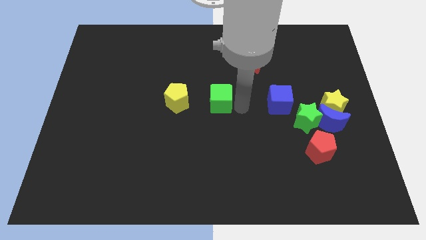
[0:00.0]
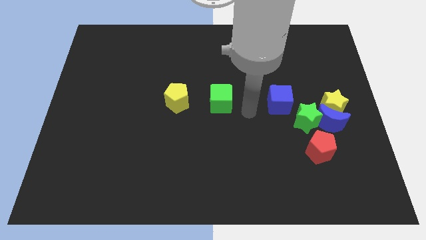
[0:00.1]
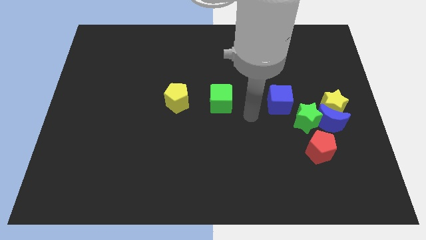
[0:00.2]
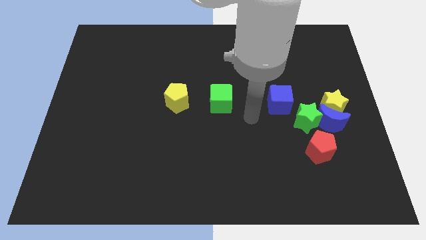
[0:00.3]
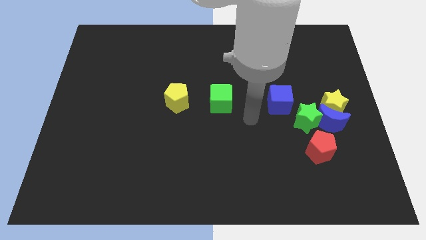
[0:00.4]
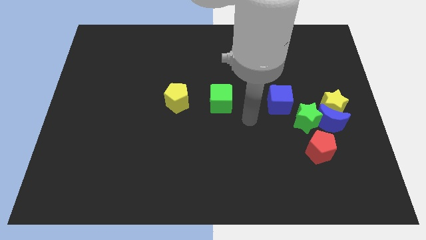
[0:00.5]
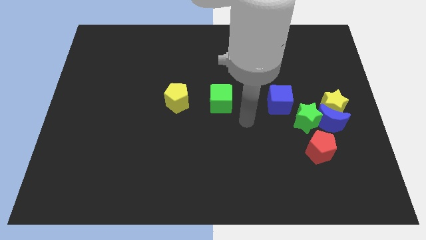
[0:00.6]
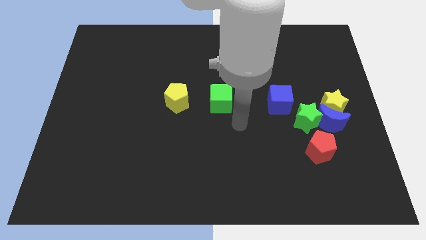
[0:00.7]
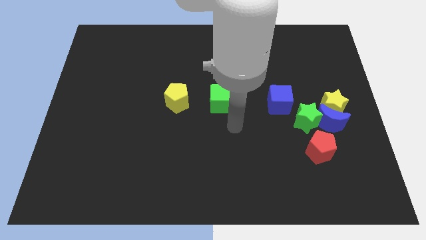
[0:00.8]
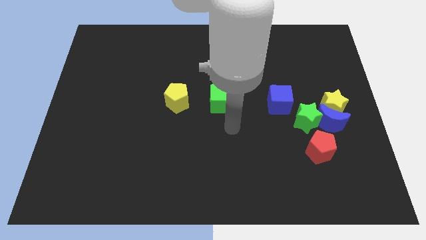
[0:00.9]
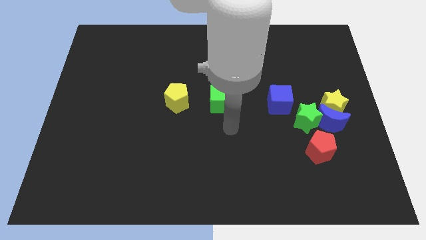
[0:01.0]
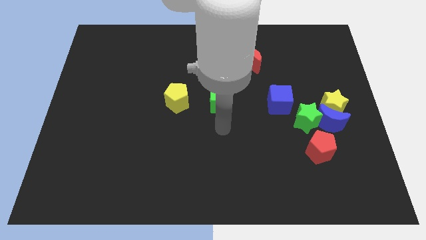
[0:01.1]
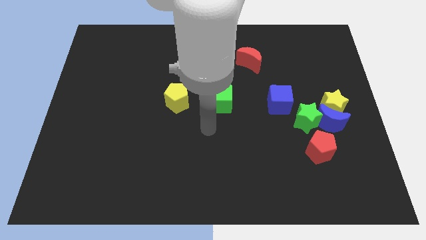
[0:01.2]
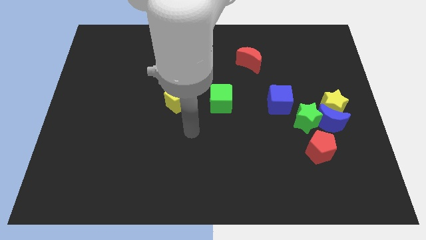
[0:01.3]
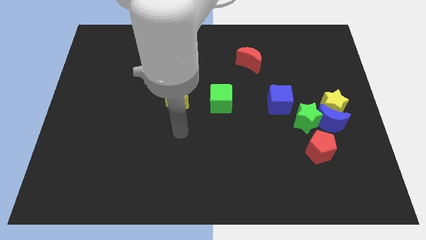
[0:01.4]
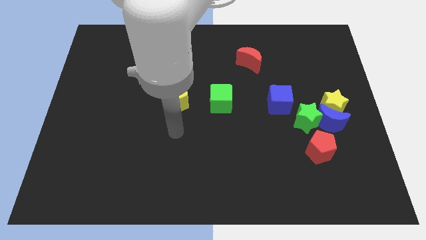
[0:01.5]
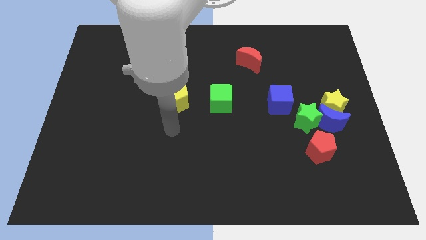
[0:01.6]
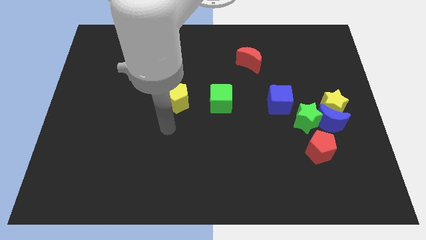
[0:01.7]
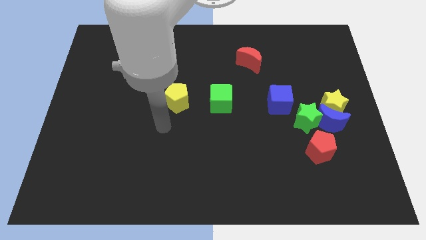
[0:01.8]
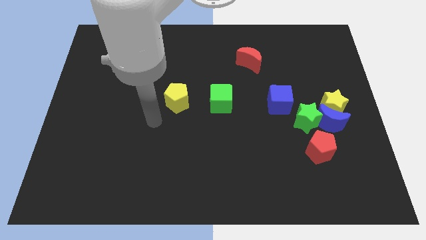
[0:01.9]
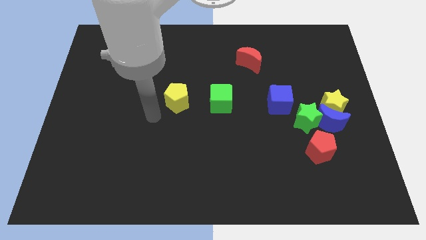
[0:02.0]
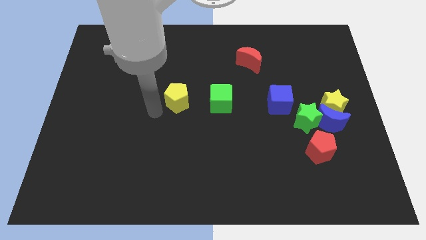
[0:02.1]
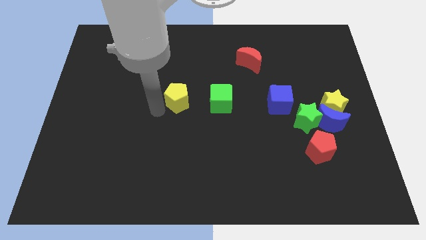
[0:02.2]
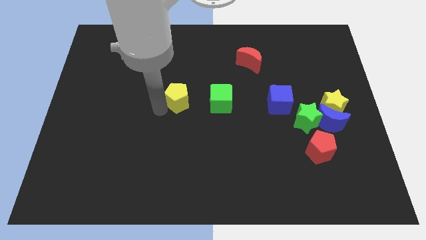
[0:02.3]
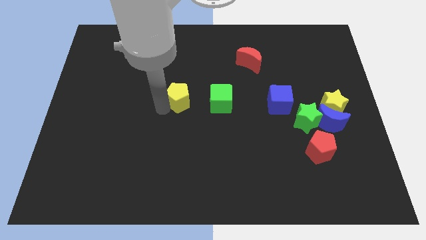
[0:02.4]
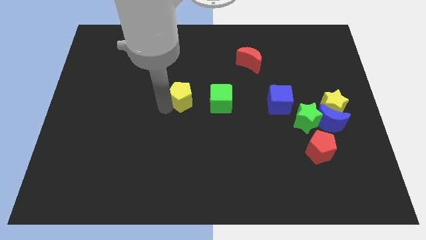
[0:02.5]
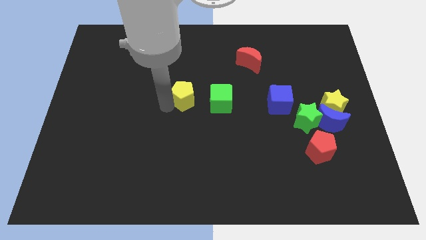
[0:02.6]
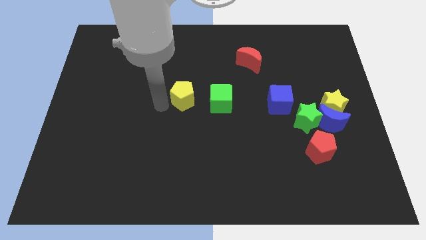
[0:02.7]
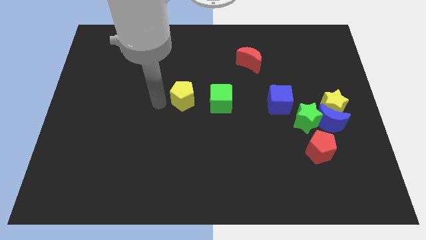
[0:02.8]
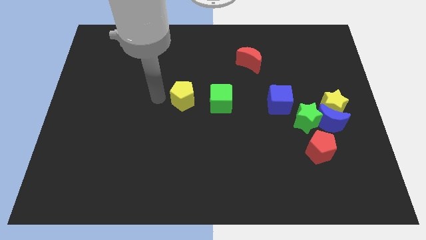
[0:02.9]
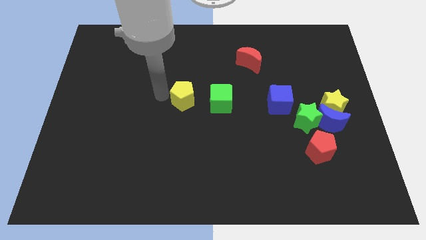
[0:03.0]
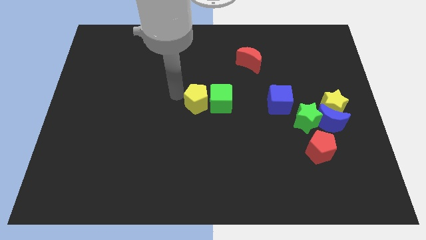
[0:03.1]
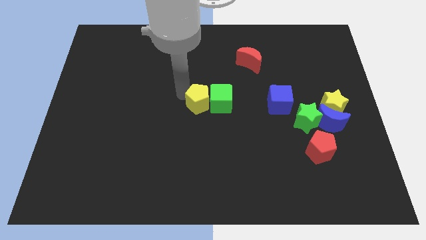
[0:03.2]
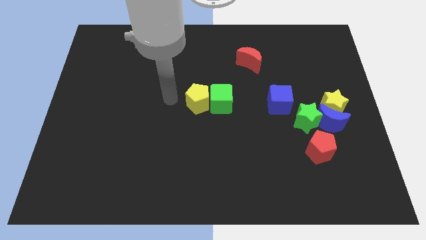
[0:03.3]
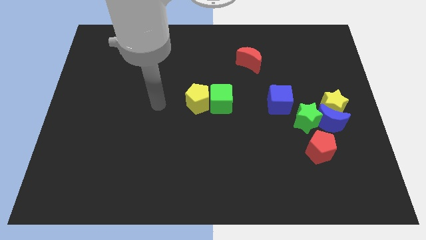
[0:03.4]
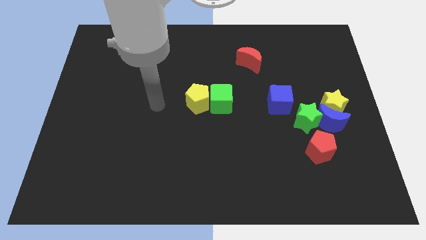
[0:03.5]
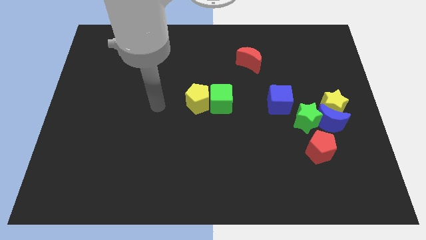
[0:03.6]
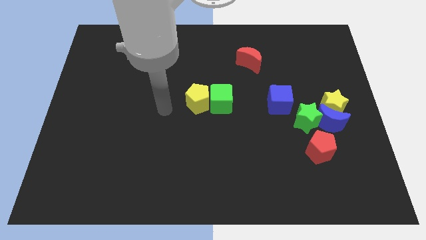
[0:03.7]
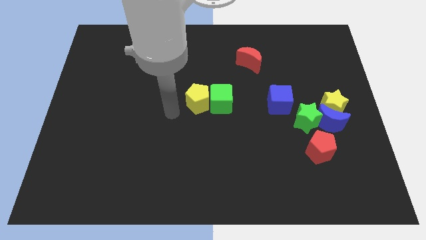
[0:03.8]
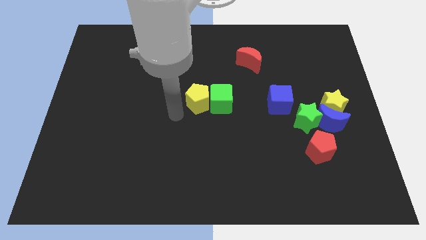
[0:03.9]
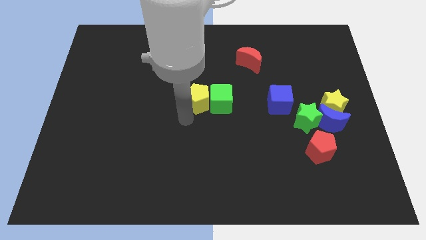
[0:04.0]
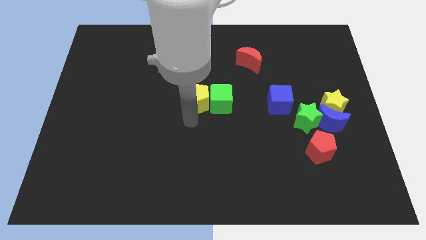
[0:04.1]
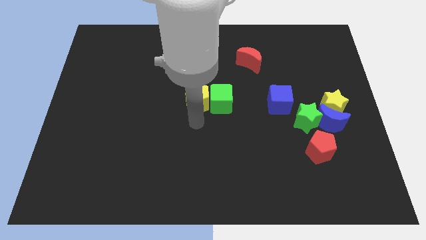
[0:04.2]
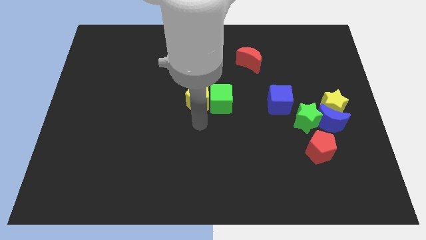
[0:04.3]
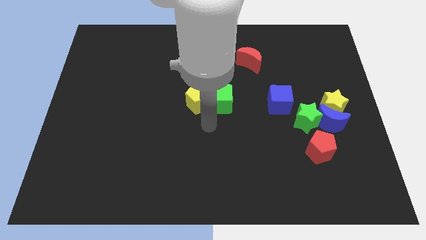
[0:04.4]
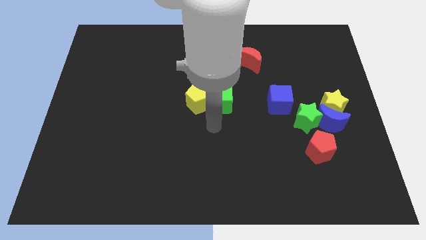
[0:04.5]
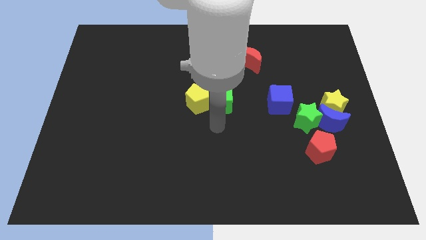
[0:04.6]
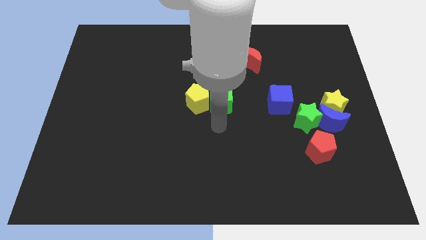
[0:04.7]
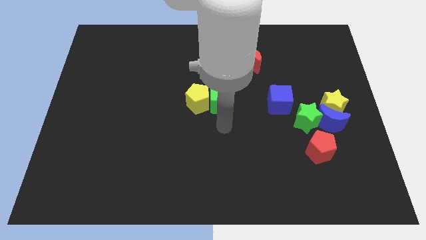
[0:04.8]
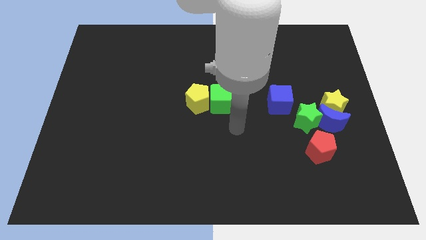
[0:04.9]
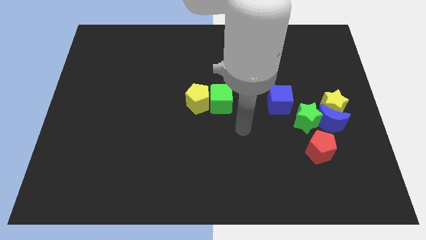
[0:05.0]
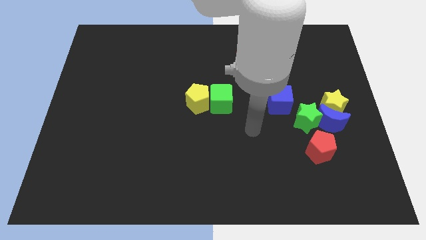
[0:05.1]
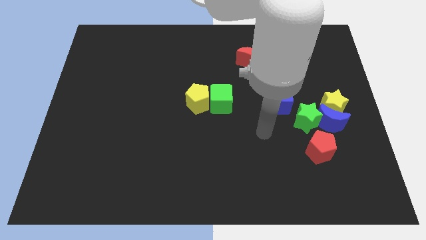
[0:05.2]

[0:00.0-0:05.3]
push the yellow pentagon left to the green cube

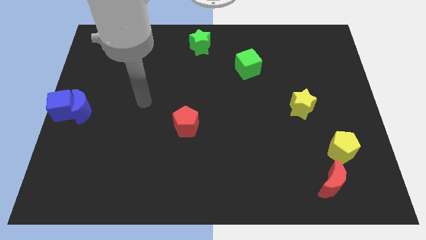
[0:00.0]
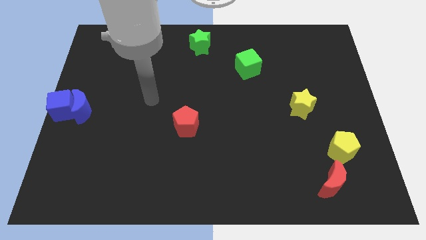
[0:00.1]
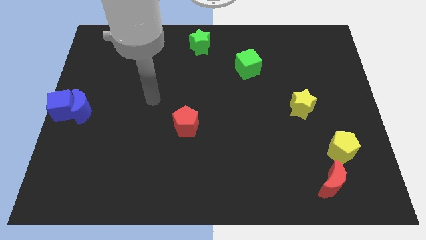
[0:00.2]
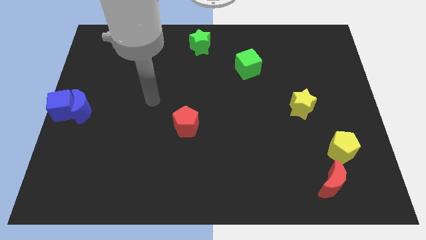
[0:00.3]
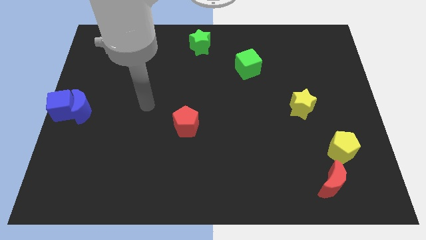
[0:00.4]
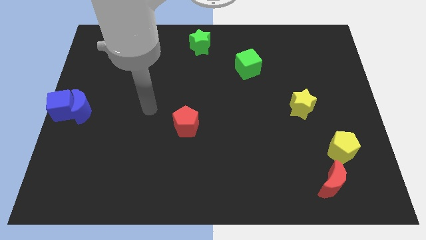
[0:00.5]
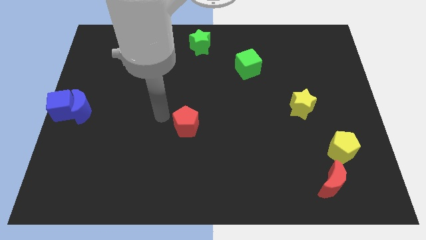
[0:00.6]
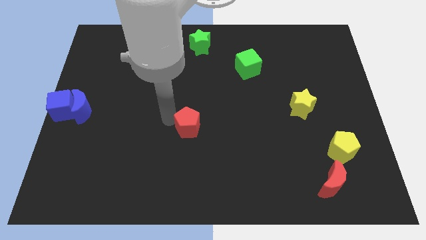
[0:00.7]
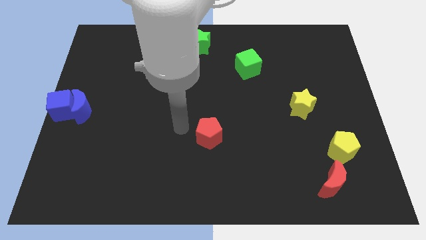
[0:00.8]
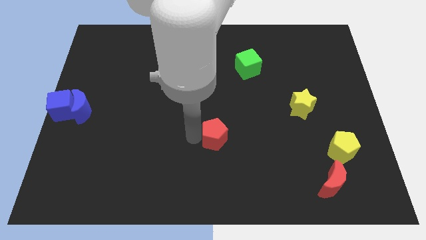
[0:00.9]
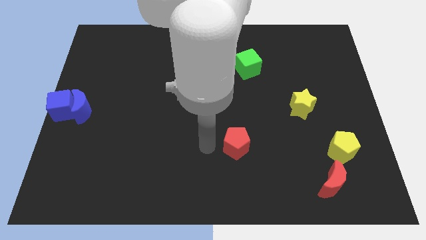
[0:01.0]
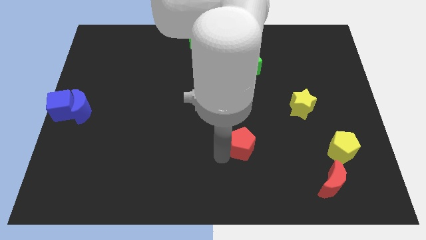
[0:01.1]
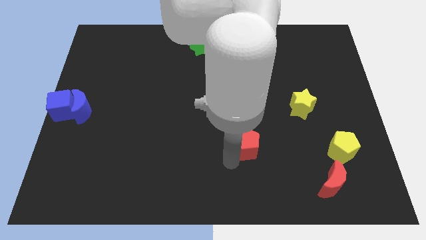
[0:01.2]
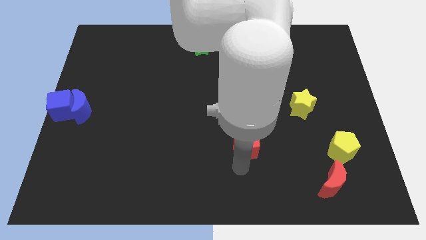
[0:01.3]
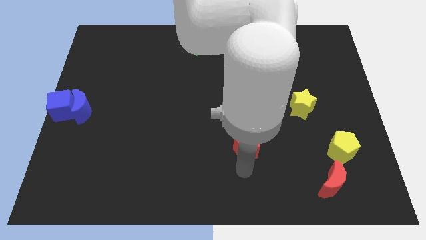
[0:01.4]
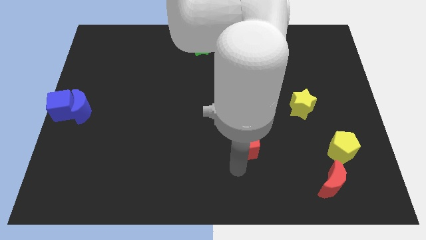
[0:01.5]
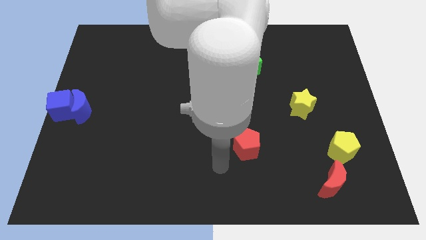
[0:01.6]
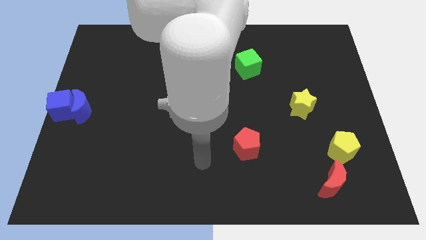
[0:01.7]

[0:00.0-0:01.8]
put the red pentagon vertically below the green cube

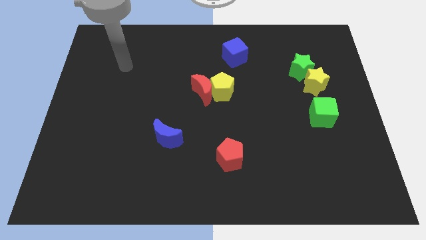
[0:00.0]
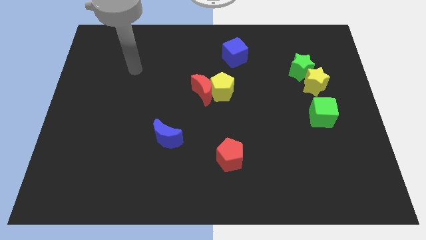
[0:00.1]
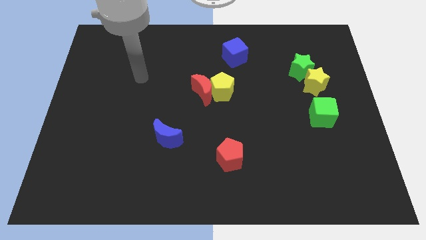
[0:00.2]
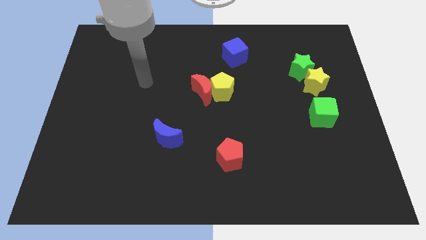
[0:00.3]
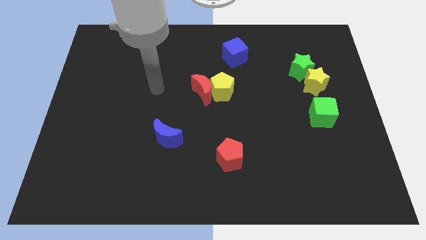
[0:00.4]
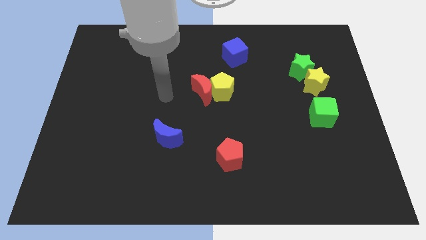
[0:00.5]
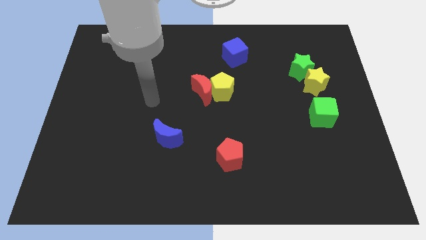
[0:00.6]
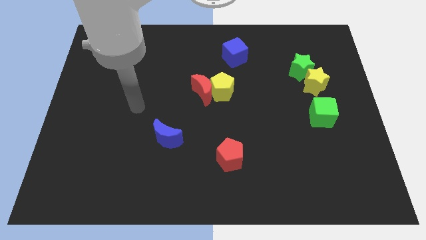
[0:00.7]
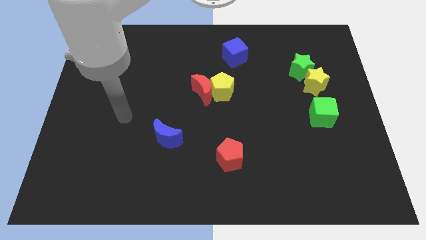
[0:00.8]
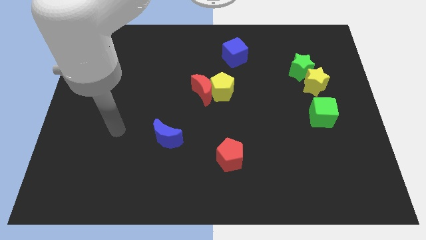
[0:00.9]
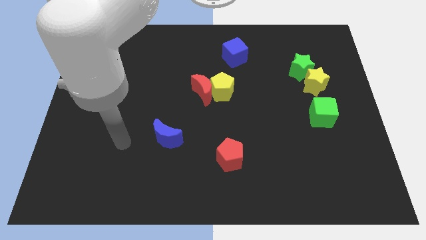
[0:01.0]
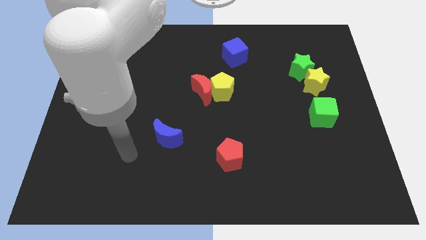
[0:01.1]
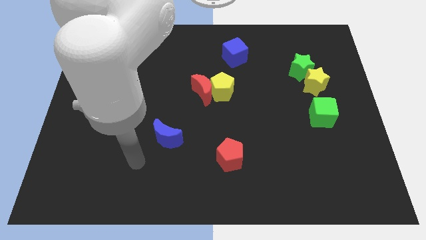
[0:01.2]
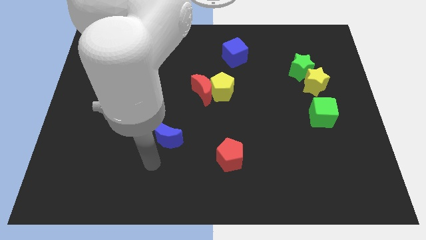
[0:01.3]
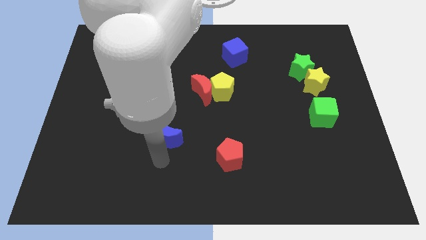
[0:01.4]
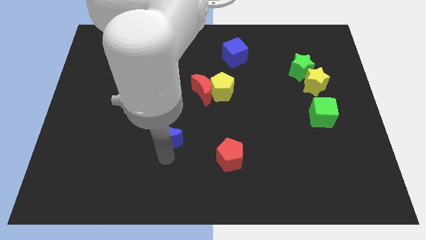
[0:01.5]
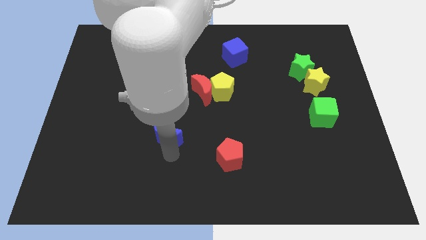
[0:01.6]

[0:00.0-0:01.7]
place your arm at the bottom of blue moon
